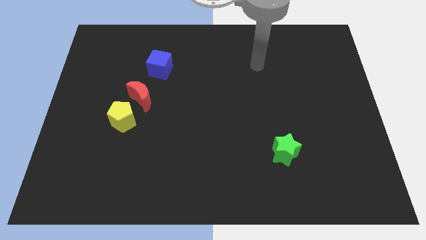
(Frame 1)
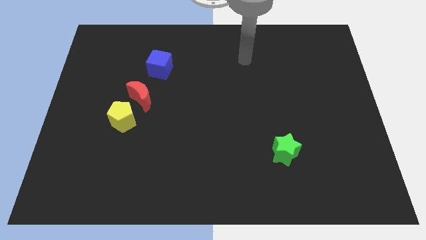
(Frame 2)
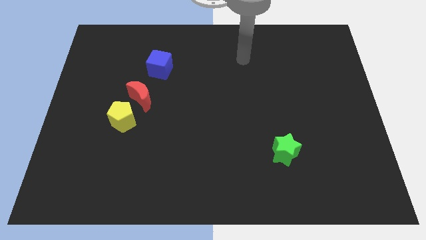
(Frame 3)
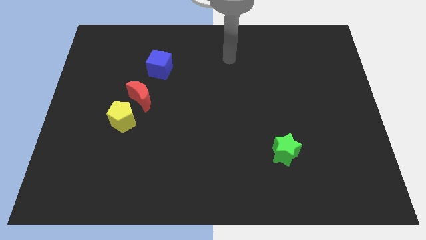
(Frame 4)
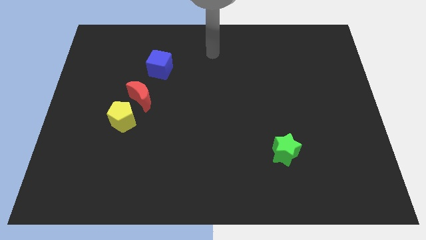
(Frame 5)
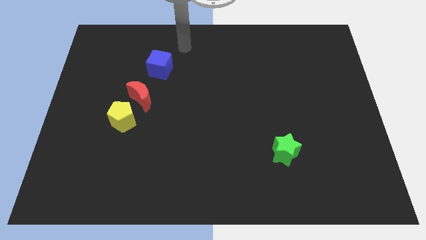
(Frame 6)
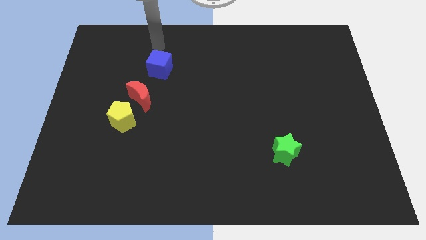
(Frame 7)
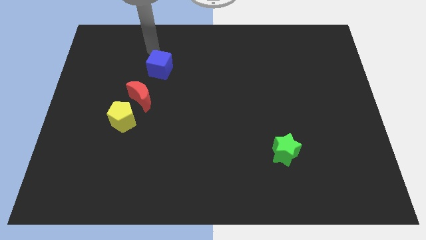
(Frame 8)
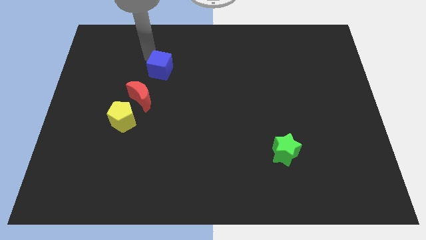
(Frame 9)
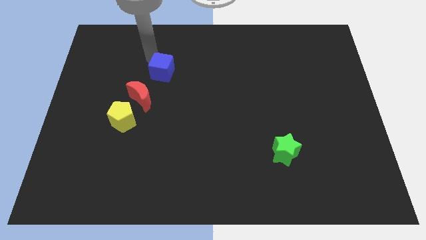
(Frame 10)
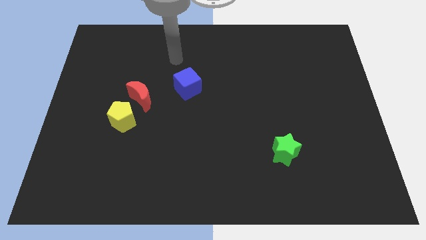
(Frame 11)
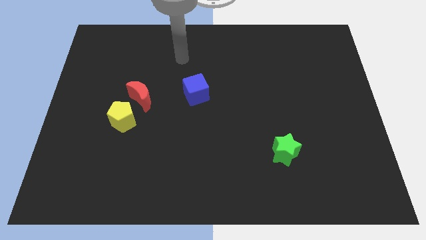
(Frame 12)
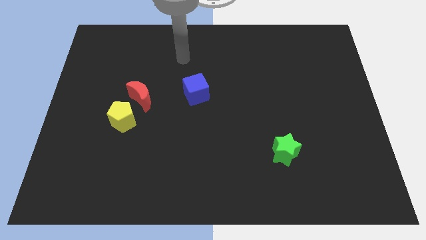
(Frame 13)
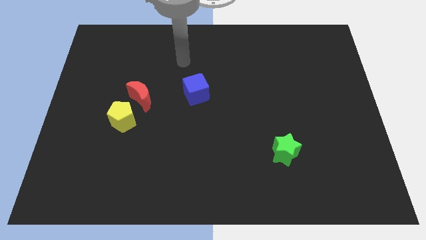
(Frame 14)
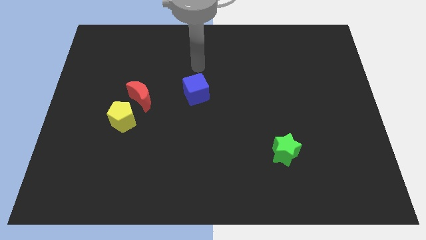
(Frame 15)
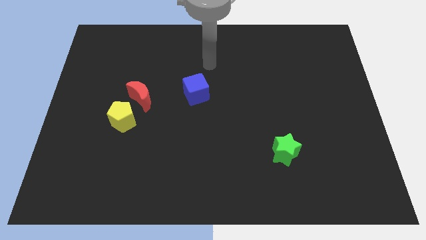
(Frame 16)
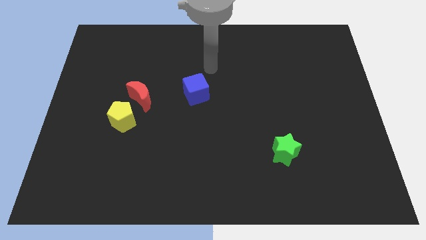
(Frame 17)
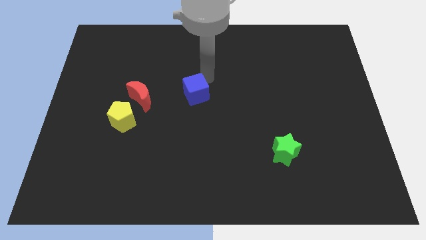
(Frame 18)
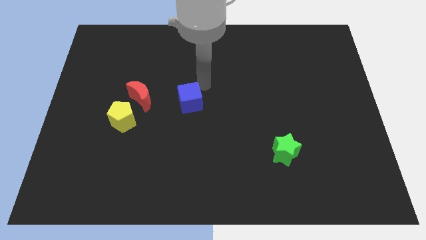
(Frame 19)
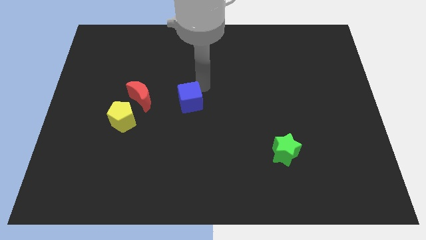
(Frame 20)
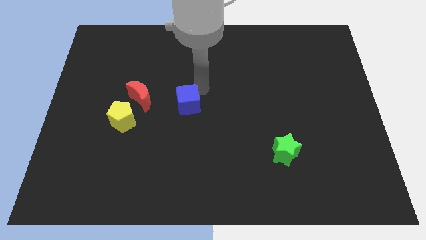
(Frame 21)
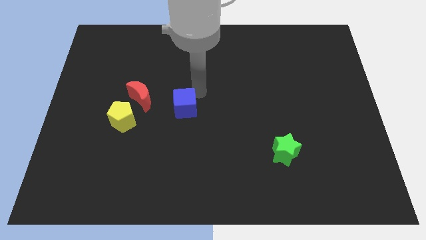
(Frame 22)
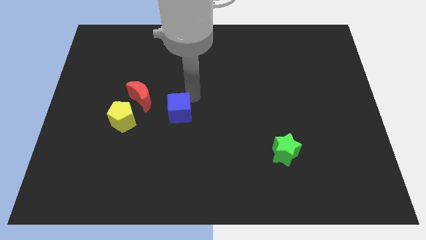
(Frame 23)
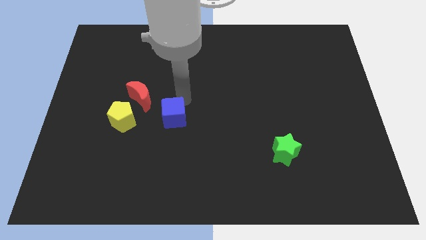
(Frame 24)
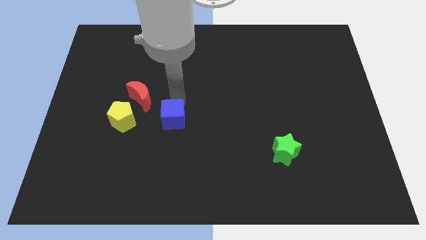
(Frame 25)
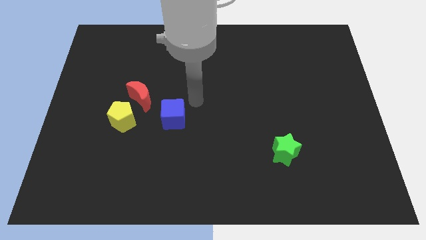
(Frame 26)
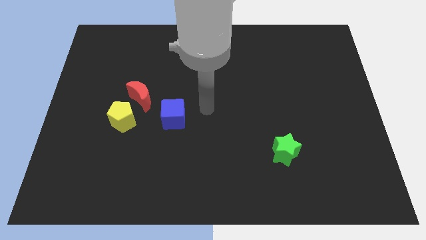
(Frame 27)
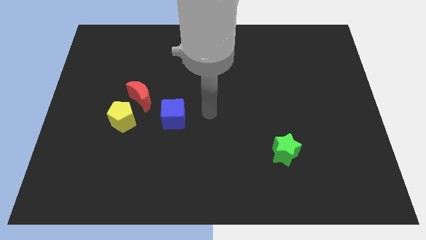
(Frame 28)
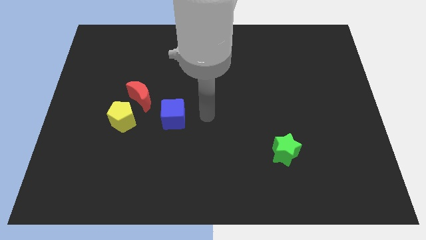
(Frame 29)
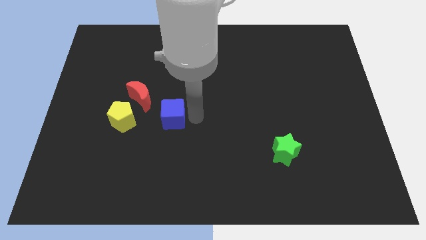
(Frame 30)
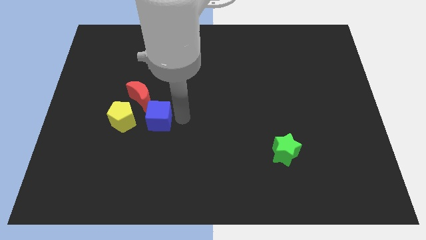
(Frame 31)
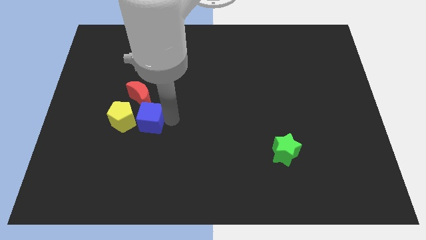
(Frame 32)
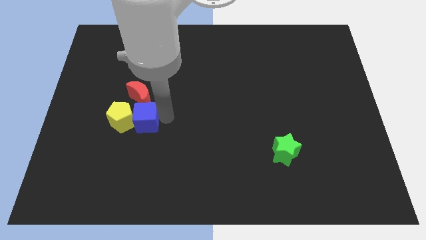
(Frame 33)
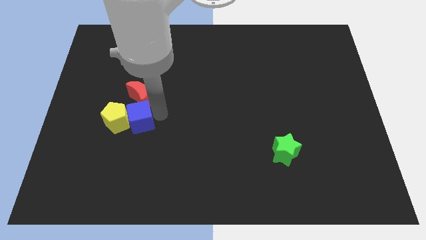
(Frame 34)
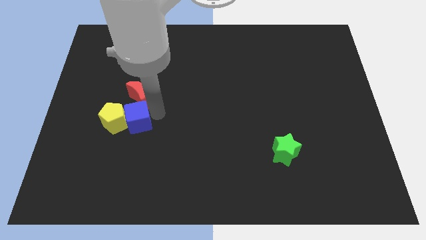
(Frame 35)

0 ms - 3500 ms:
put the blue block close to the yellow block

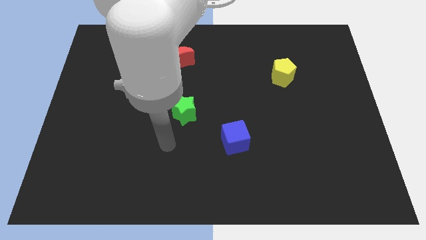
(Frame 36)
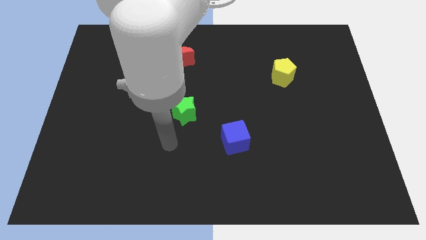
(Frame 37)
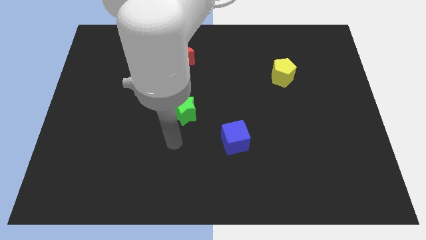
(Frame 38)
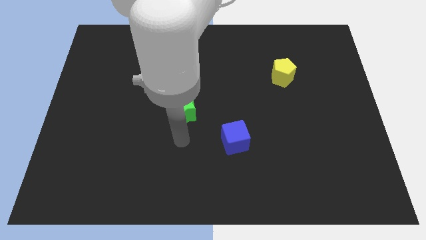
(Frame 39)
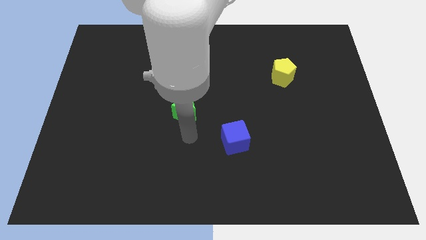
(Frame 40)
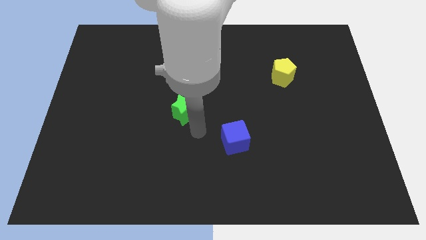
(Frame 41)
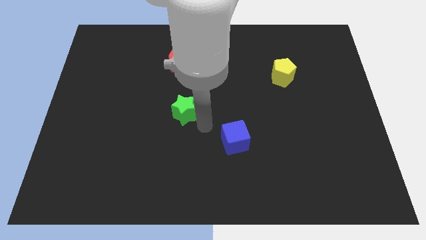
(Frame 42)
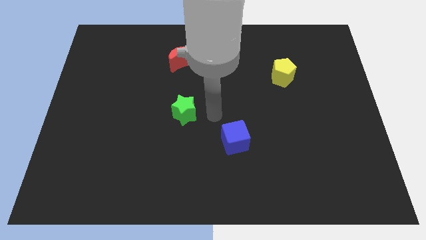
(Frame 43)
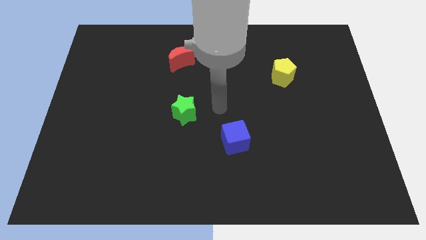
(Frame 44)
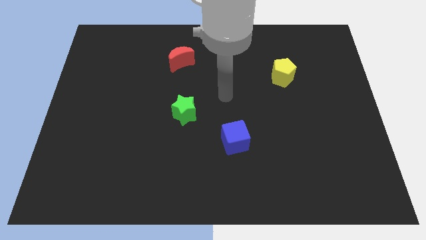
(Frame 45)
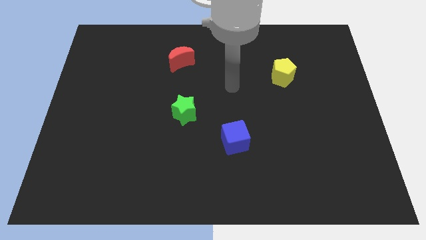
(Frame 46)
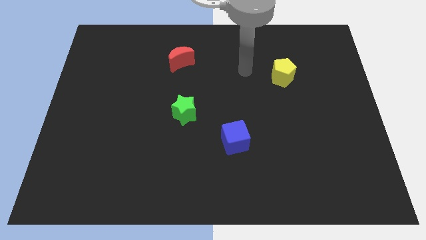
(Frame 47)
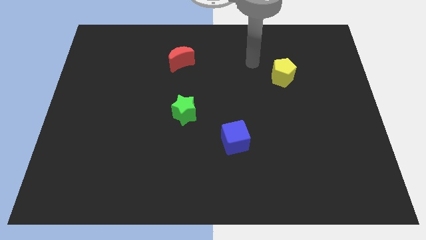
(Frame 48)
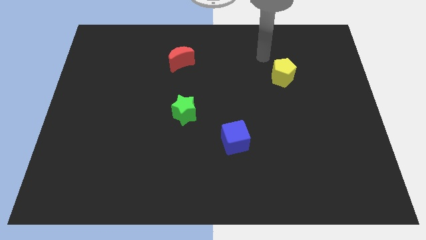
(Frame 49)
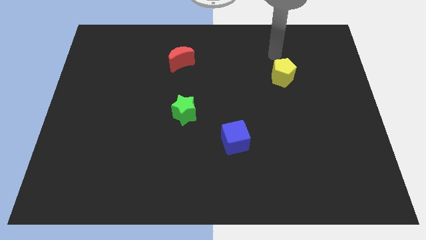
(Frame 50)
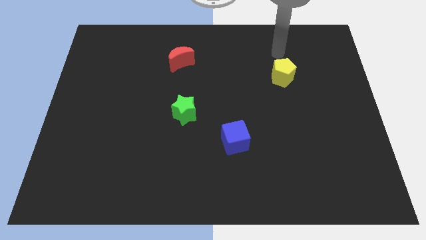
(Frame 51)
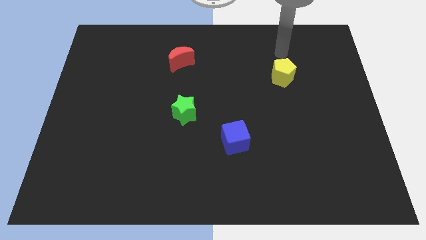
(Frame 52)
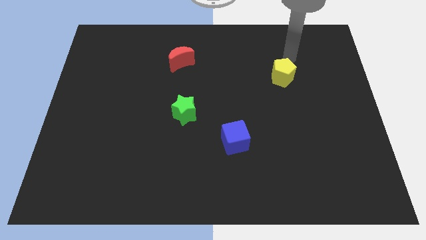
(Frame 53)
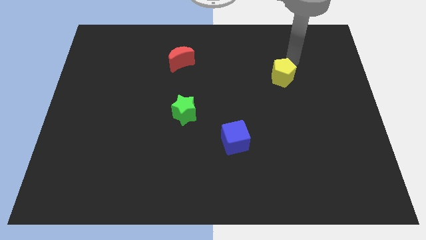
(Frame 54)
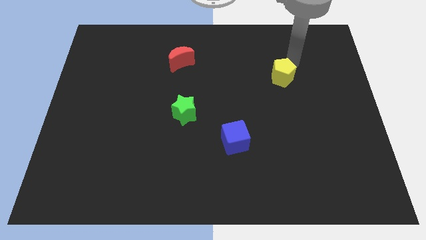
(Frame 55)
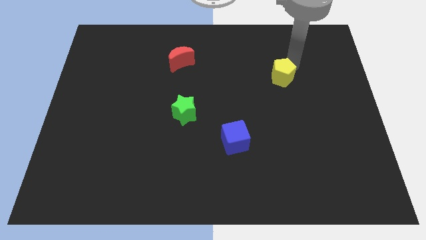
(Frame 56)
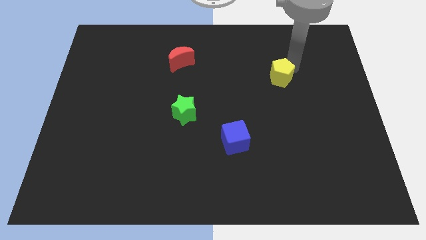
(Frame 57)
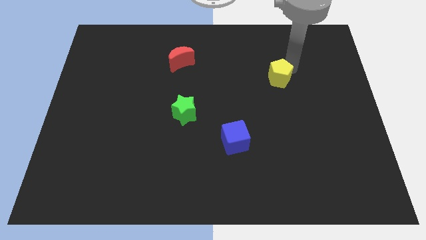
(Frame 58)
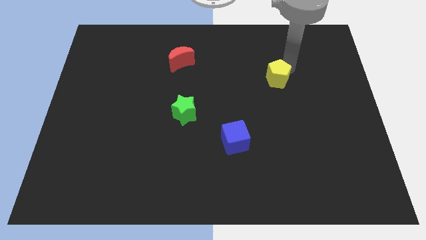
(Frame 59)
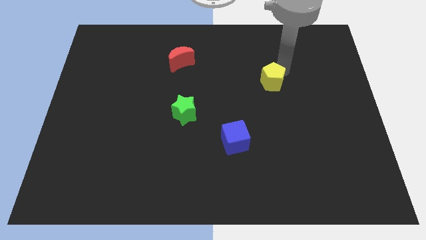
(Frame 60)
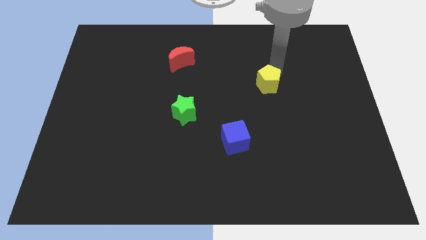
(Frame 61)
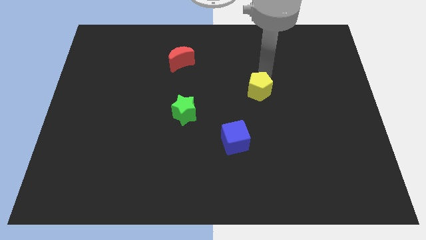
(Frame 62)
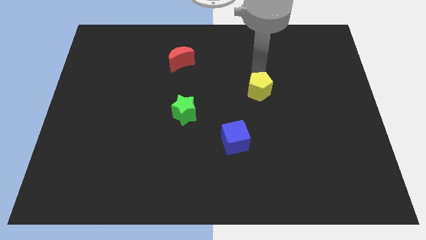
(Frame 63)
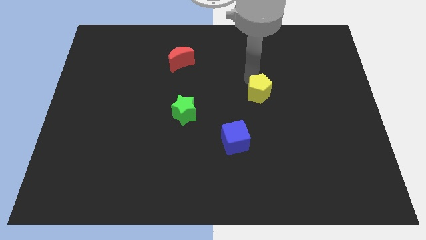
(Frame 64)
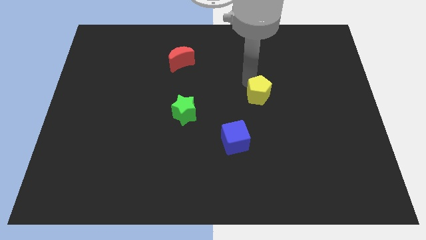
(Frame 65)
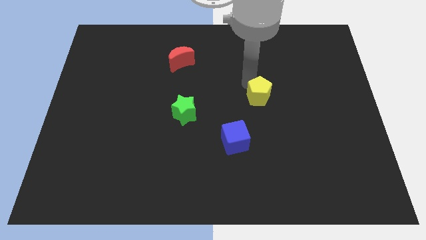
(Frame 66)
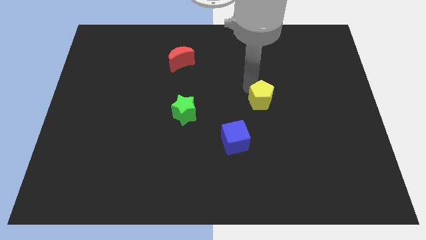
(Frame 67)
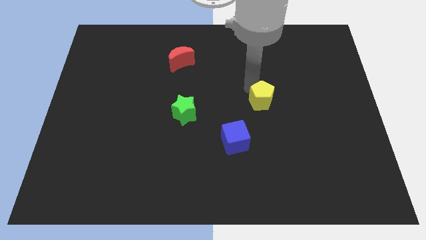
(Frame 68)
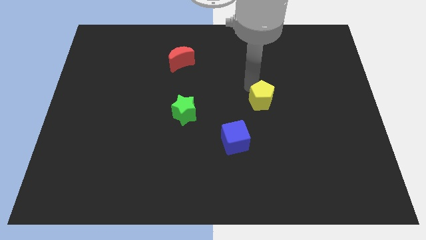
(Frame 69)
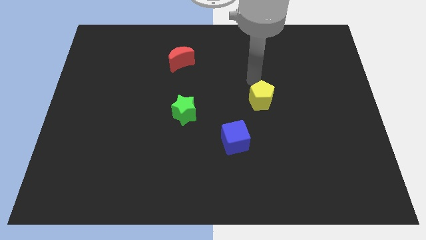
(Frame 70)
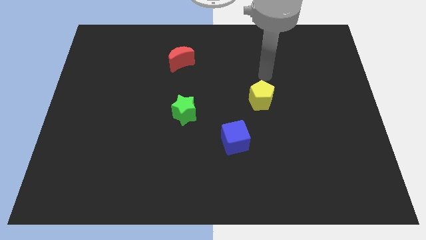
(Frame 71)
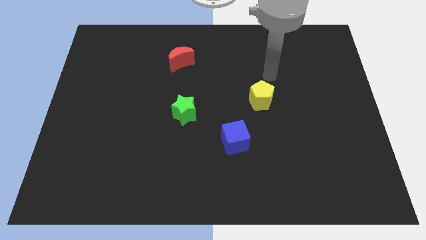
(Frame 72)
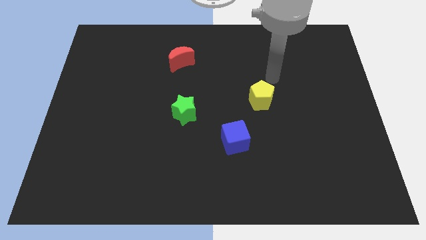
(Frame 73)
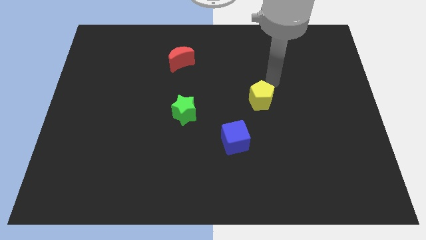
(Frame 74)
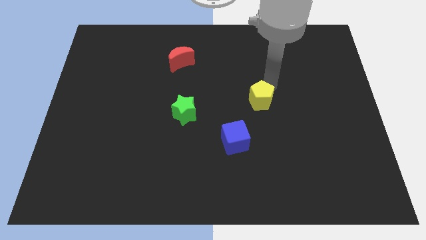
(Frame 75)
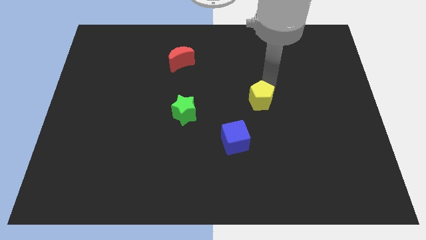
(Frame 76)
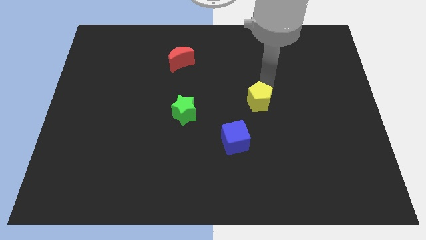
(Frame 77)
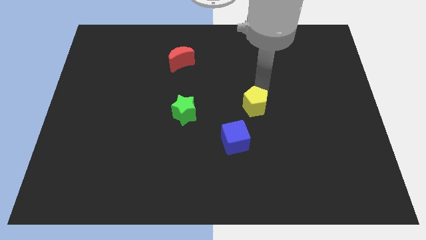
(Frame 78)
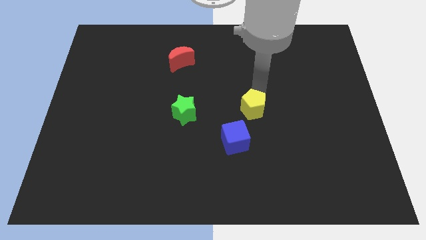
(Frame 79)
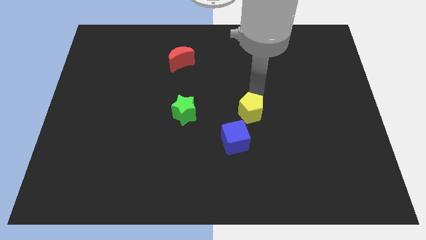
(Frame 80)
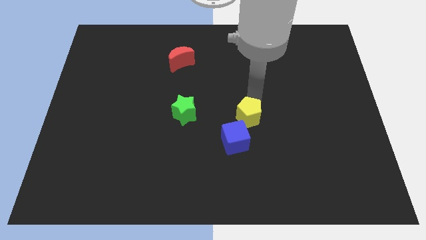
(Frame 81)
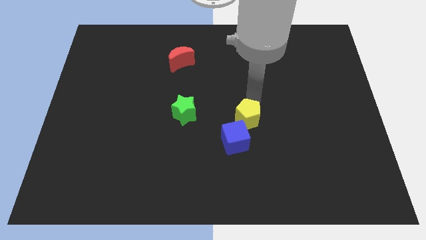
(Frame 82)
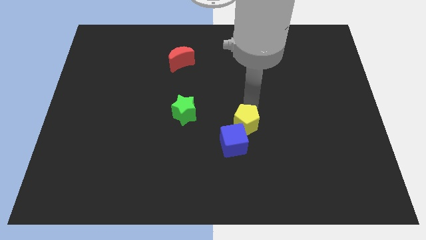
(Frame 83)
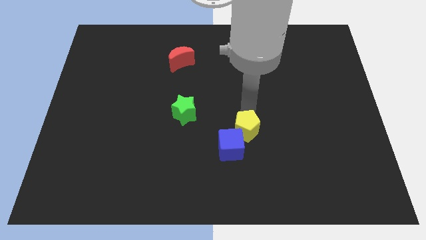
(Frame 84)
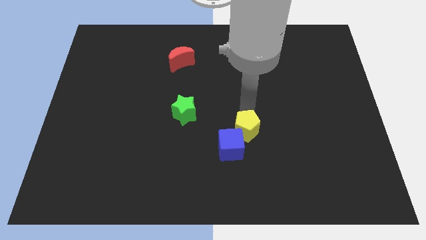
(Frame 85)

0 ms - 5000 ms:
push the yellow pentagon close to the cube
